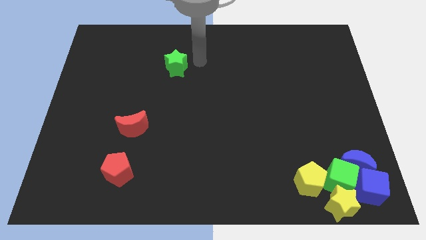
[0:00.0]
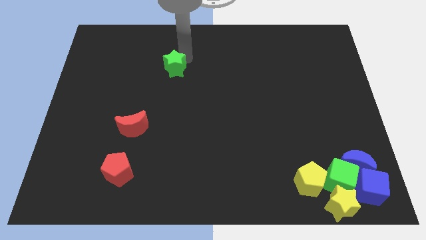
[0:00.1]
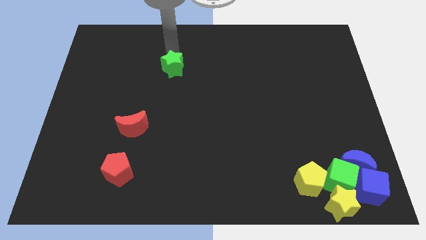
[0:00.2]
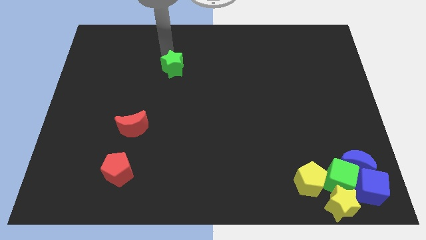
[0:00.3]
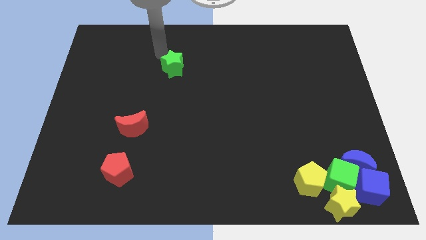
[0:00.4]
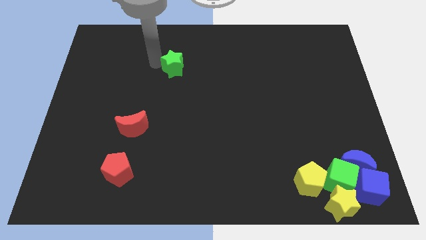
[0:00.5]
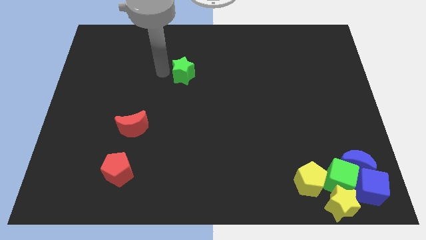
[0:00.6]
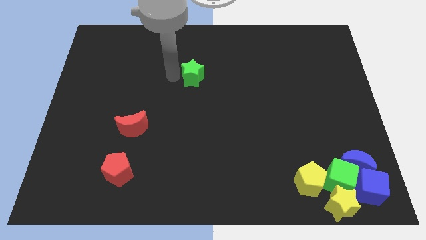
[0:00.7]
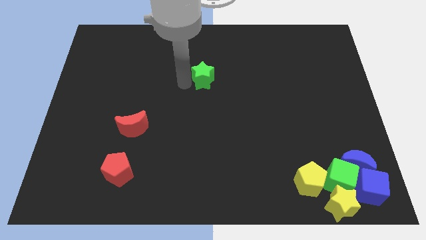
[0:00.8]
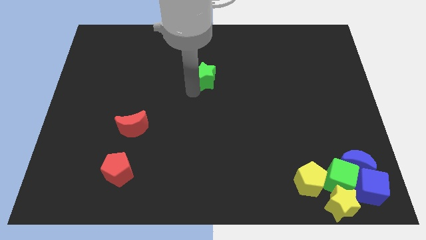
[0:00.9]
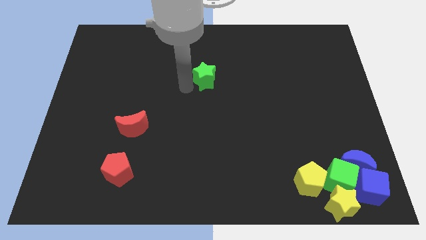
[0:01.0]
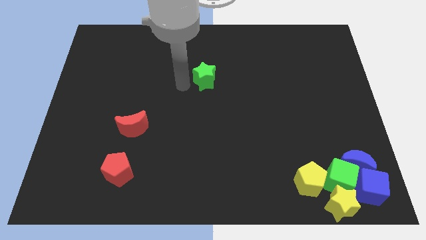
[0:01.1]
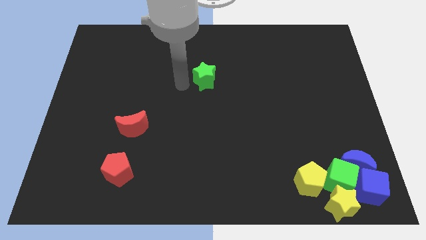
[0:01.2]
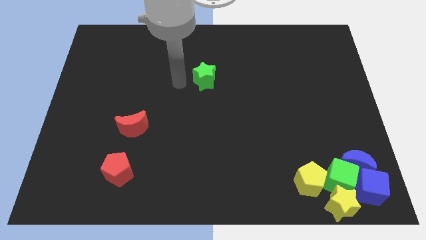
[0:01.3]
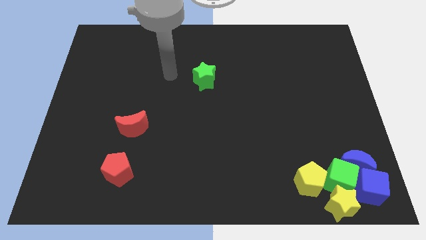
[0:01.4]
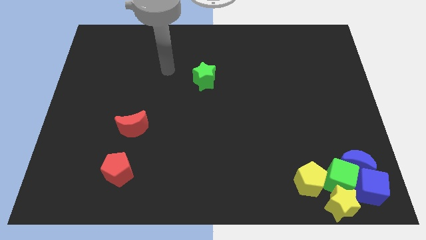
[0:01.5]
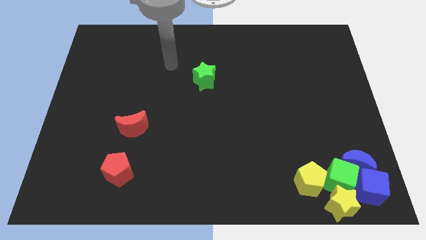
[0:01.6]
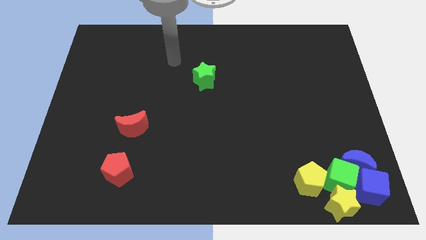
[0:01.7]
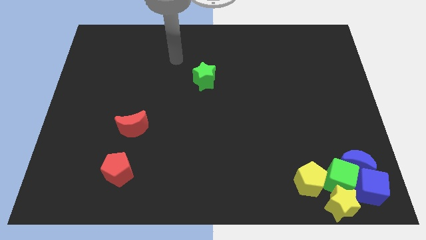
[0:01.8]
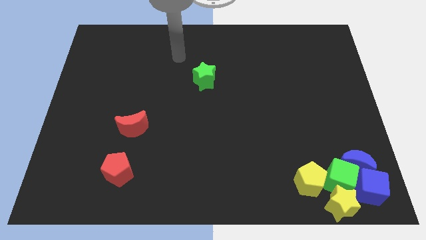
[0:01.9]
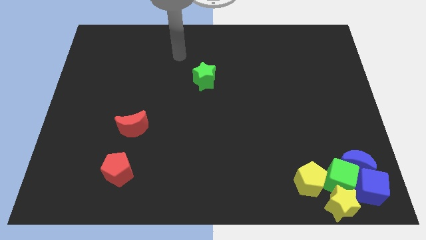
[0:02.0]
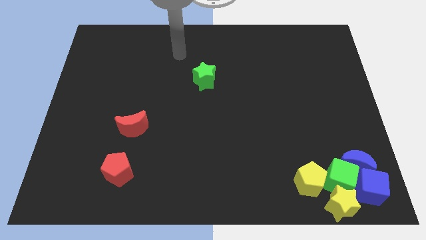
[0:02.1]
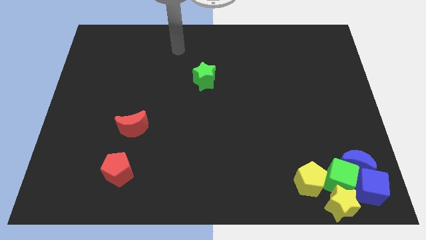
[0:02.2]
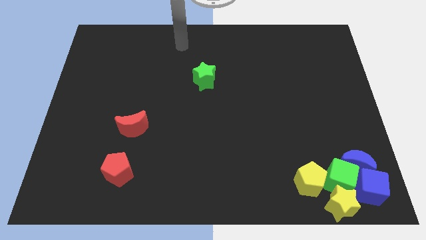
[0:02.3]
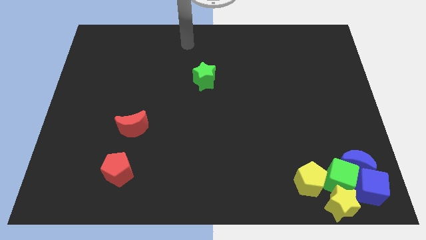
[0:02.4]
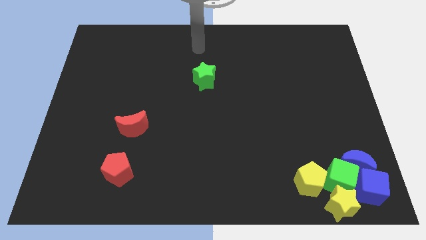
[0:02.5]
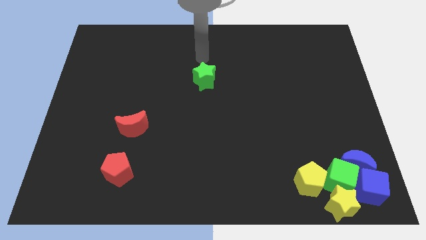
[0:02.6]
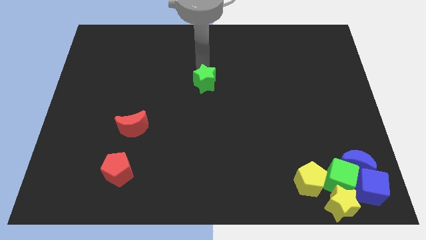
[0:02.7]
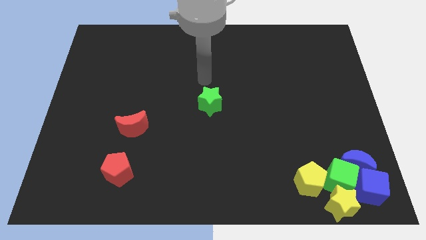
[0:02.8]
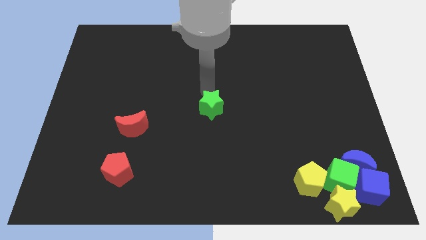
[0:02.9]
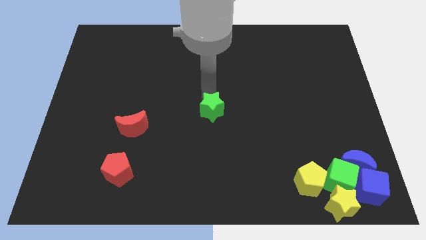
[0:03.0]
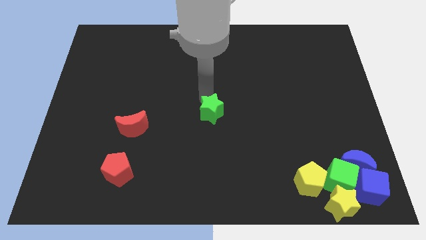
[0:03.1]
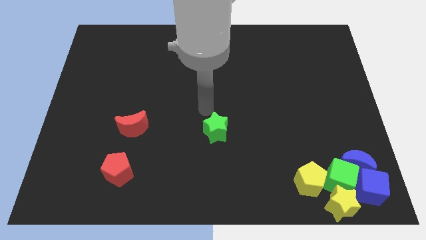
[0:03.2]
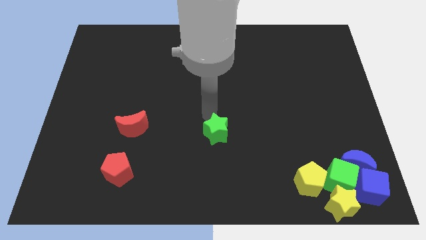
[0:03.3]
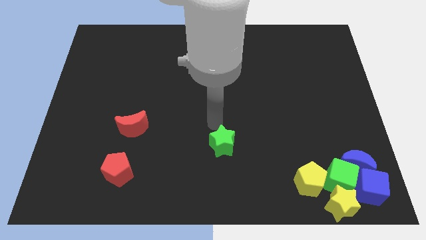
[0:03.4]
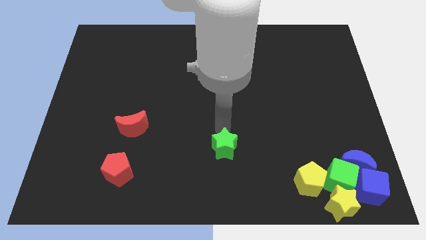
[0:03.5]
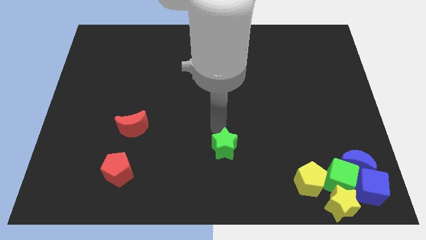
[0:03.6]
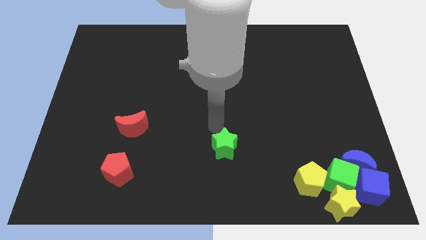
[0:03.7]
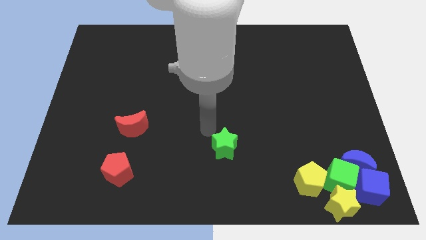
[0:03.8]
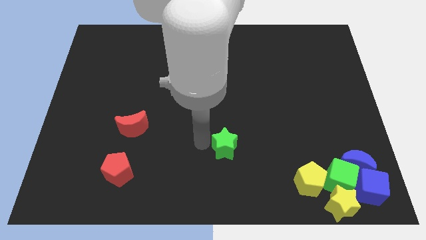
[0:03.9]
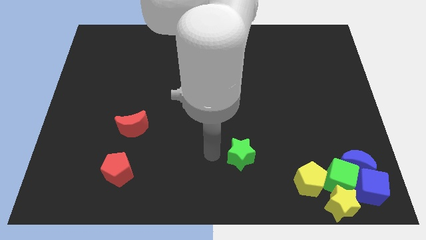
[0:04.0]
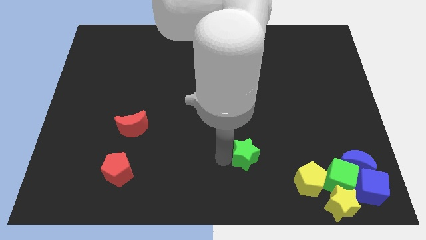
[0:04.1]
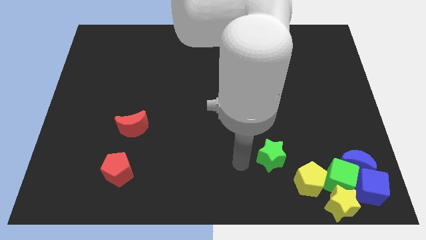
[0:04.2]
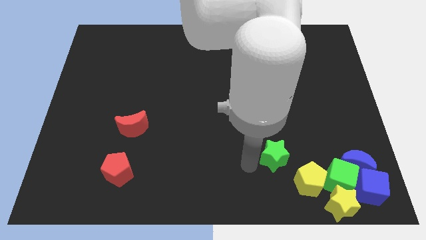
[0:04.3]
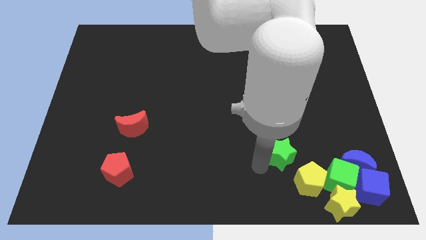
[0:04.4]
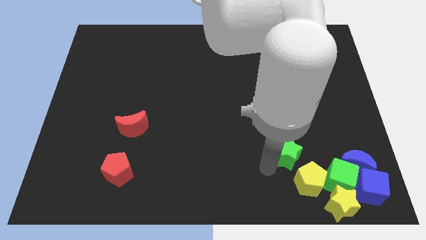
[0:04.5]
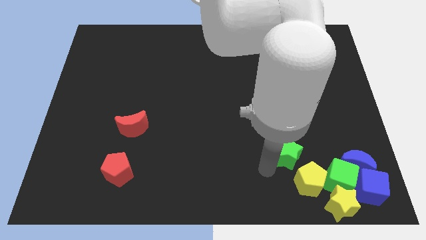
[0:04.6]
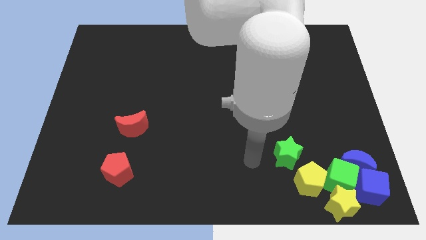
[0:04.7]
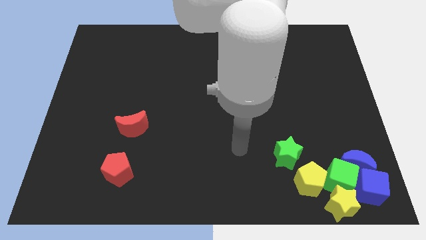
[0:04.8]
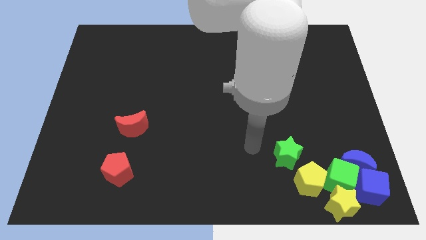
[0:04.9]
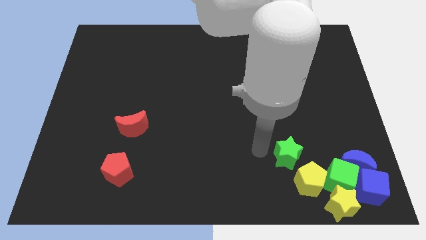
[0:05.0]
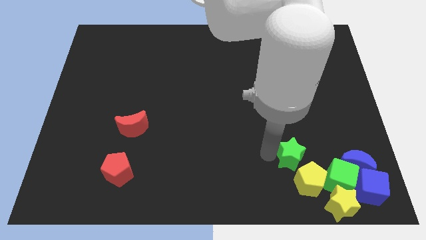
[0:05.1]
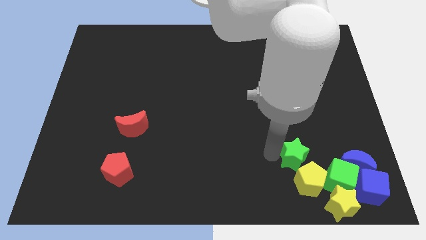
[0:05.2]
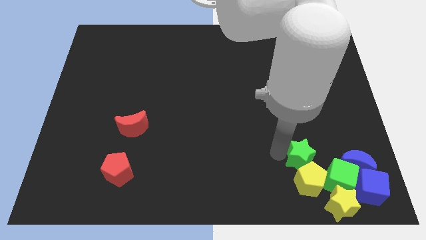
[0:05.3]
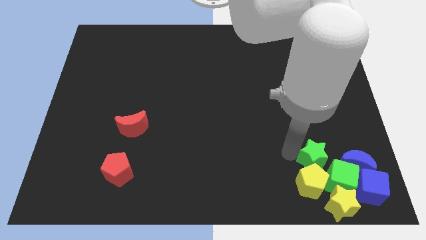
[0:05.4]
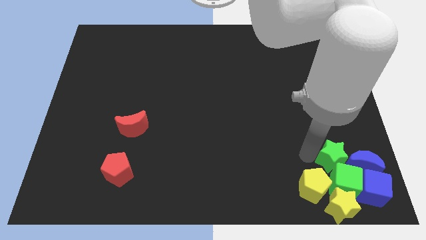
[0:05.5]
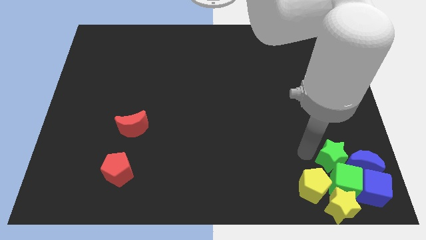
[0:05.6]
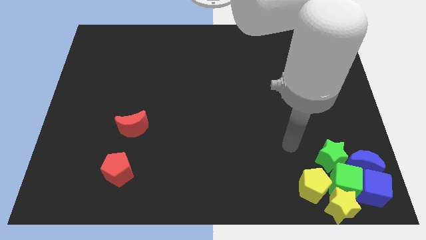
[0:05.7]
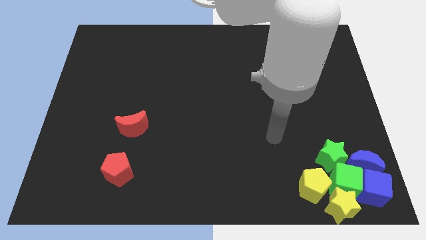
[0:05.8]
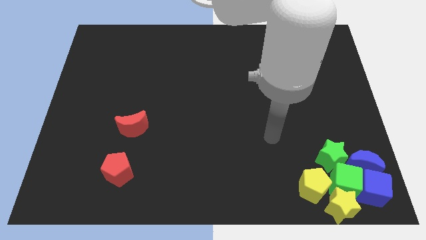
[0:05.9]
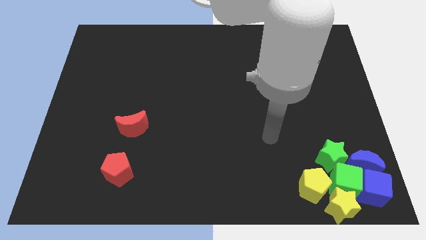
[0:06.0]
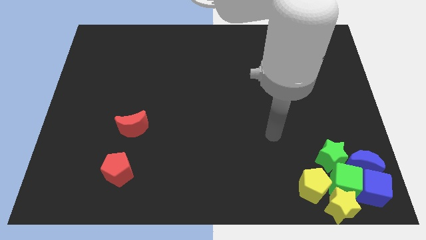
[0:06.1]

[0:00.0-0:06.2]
place green star to the top left of green cube

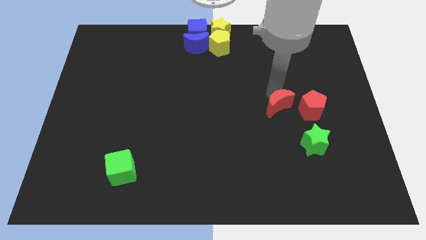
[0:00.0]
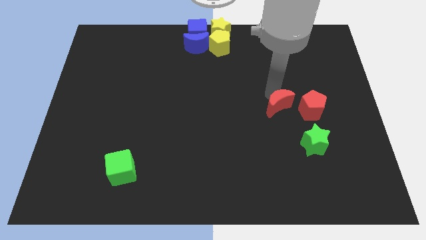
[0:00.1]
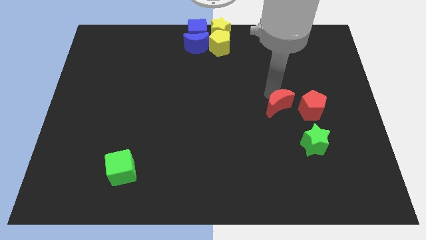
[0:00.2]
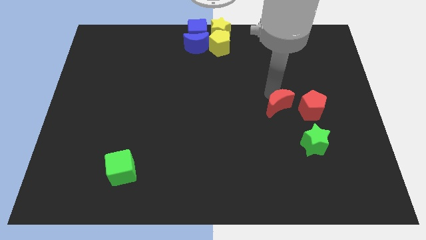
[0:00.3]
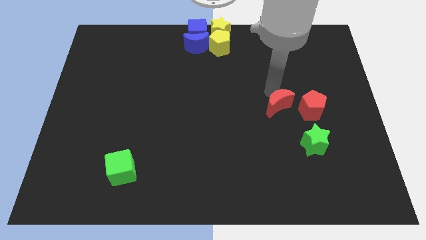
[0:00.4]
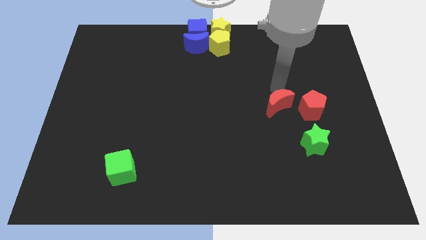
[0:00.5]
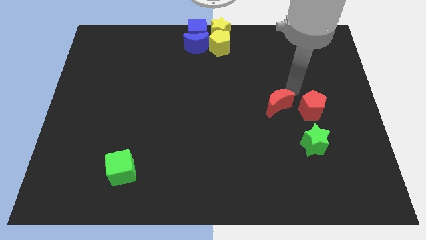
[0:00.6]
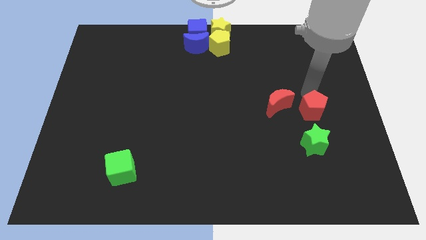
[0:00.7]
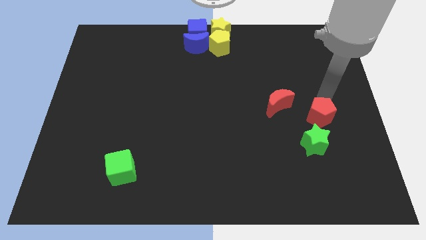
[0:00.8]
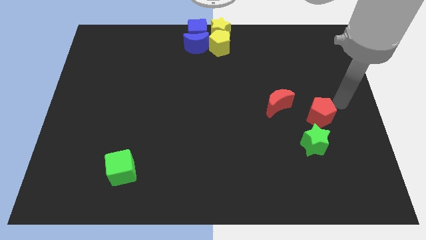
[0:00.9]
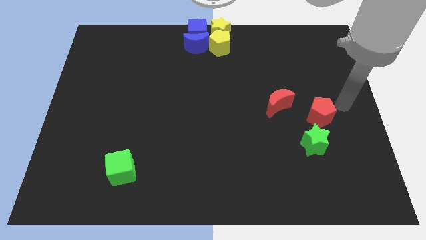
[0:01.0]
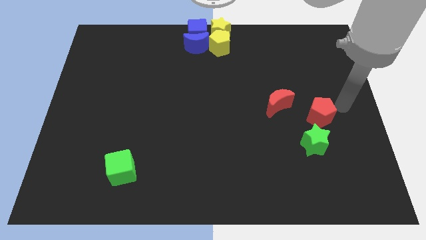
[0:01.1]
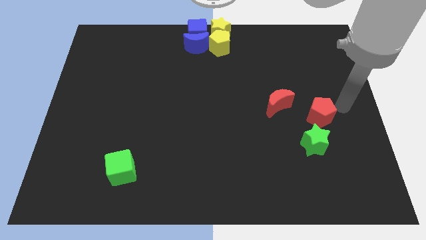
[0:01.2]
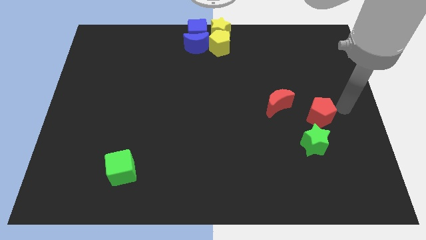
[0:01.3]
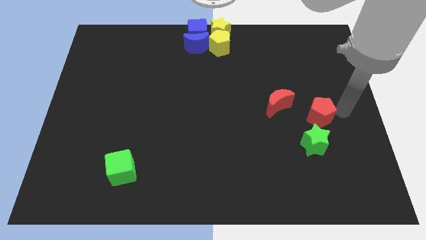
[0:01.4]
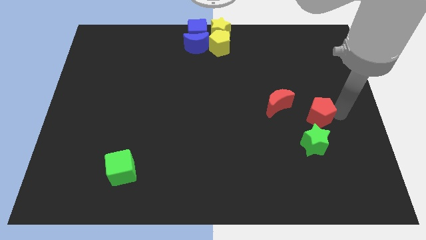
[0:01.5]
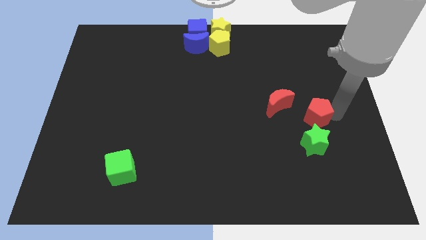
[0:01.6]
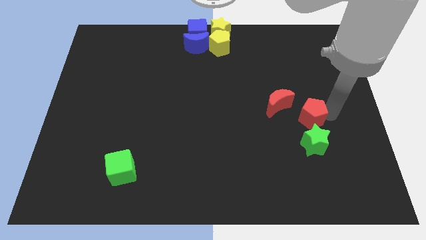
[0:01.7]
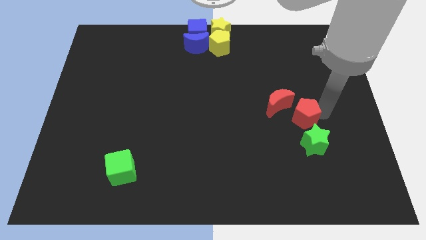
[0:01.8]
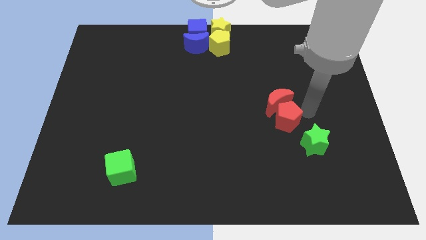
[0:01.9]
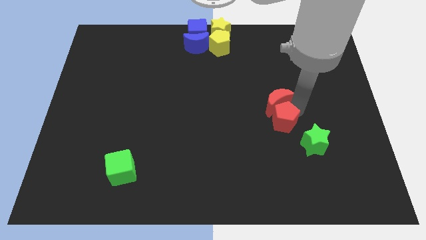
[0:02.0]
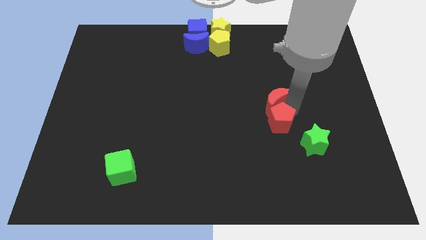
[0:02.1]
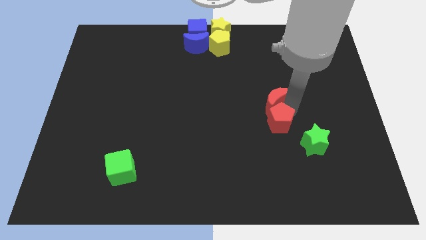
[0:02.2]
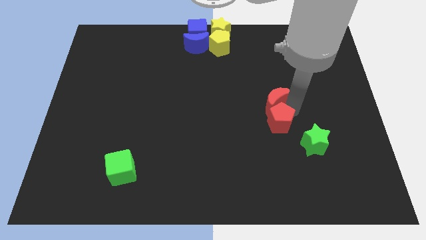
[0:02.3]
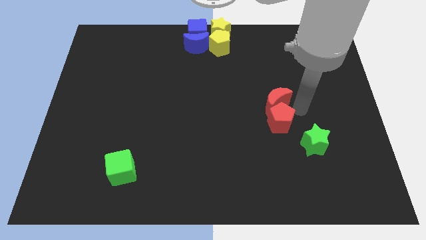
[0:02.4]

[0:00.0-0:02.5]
put the red pentagon at the bottom of the red crescent

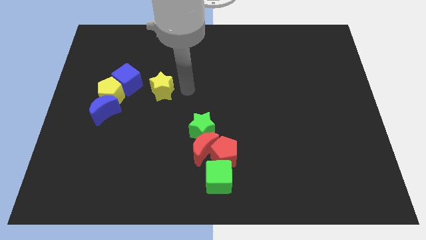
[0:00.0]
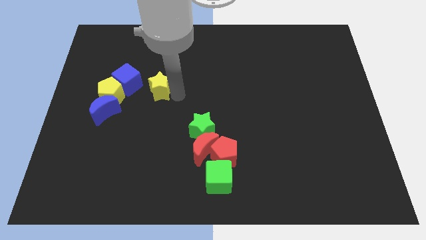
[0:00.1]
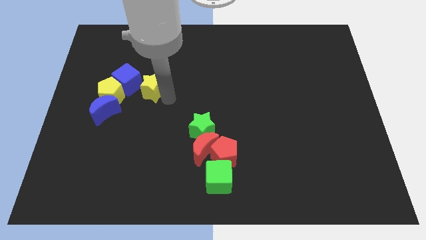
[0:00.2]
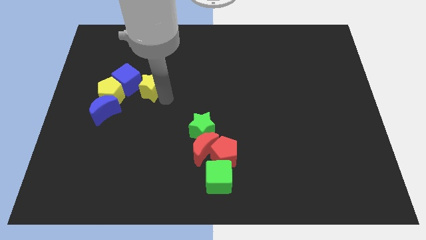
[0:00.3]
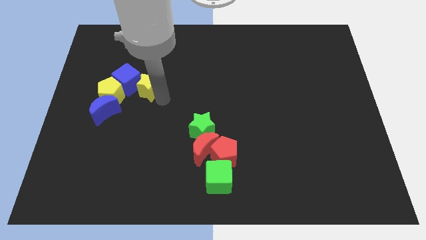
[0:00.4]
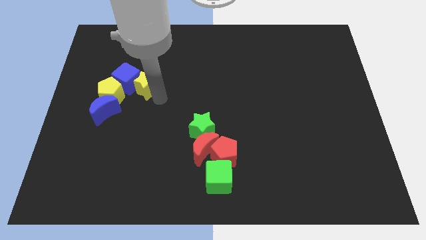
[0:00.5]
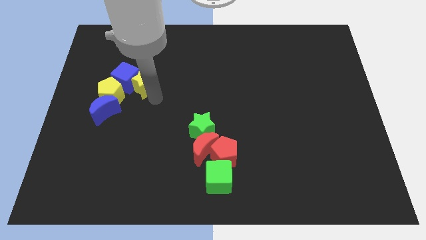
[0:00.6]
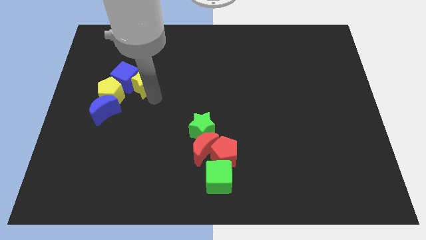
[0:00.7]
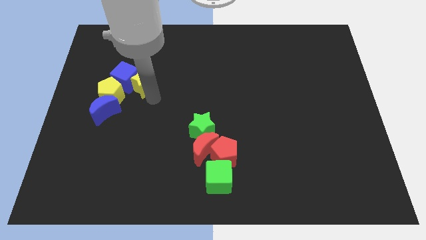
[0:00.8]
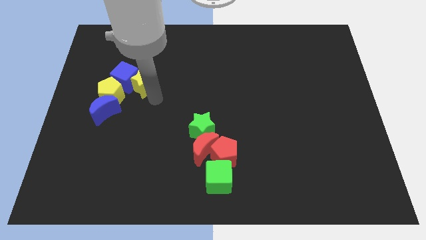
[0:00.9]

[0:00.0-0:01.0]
move yellow star right beside the blue cube
